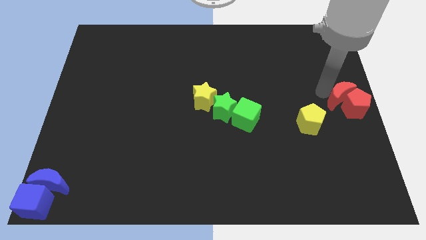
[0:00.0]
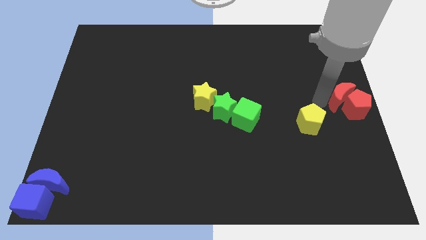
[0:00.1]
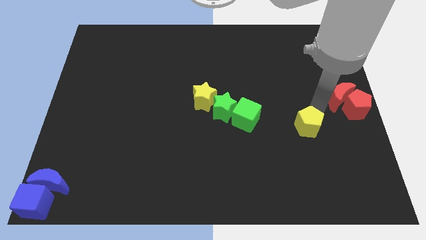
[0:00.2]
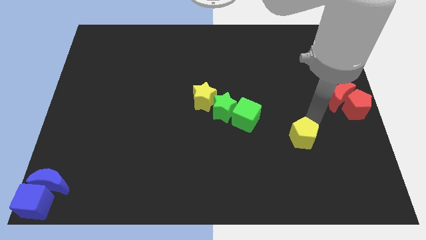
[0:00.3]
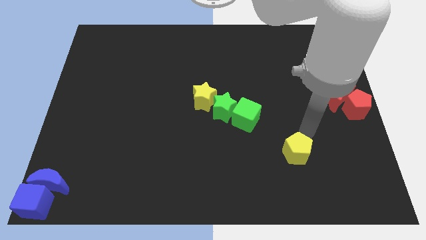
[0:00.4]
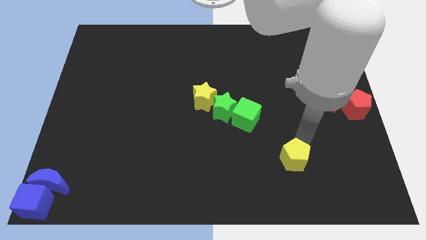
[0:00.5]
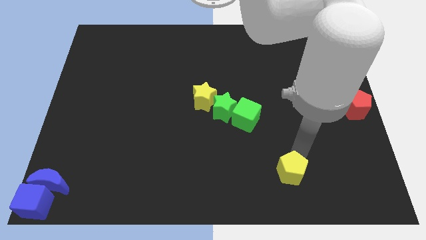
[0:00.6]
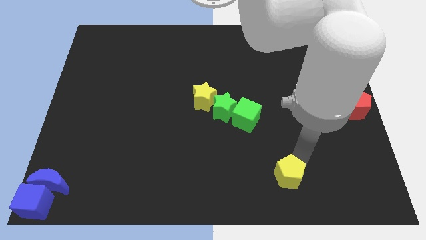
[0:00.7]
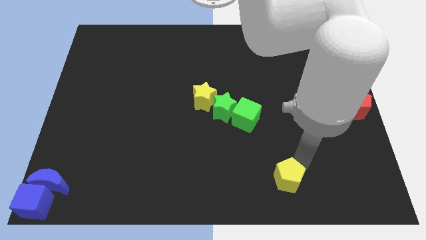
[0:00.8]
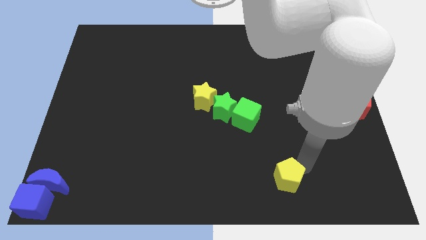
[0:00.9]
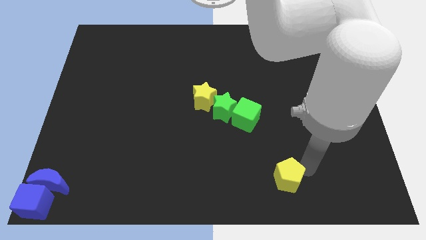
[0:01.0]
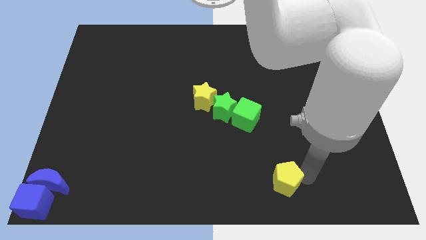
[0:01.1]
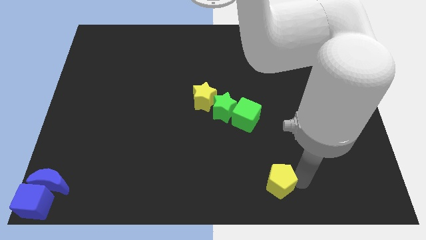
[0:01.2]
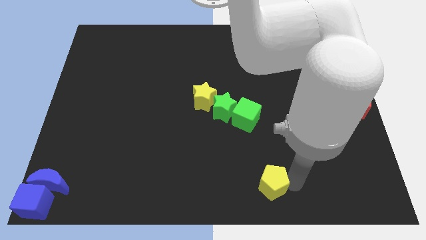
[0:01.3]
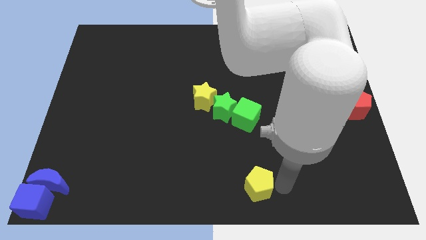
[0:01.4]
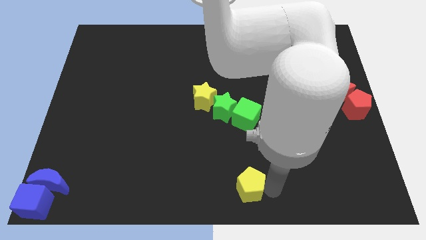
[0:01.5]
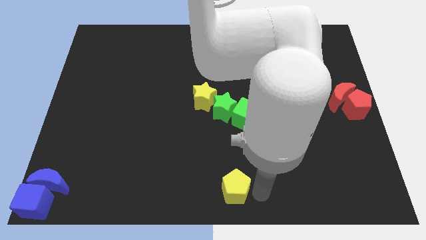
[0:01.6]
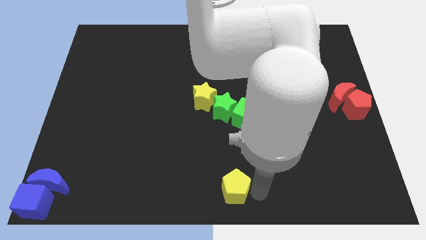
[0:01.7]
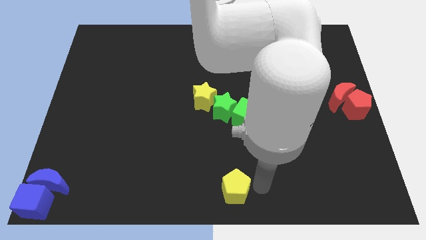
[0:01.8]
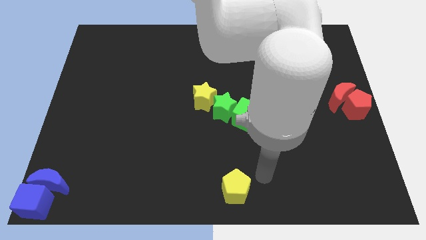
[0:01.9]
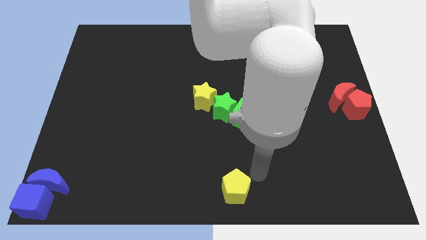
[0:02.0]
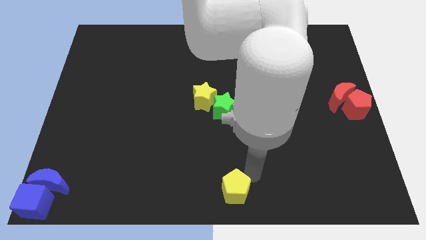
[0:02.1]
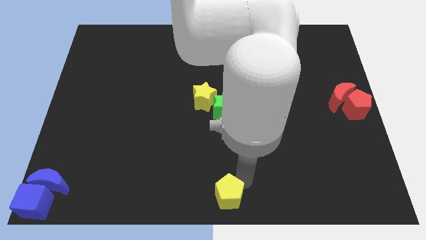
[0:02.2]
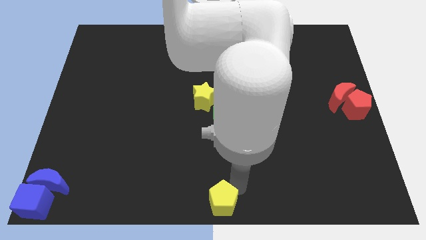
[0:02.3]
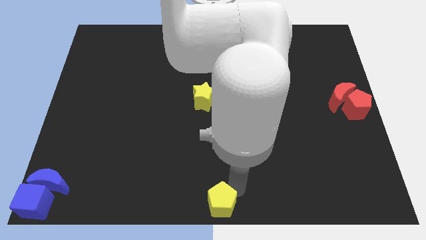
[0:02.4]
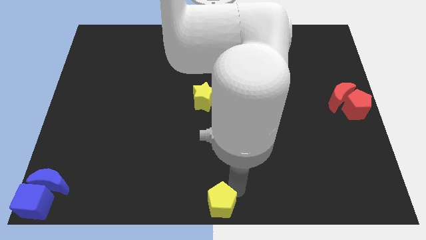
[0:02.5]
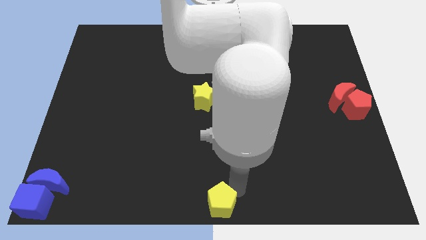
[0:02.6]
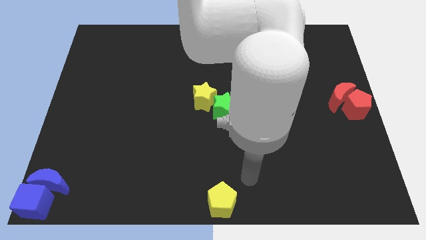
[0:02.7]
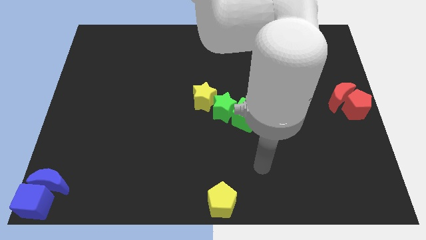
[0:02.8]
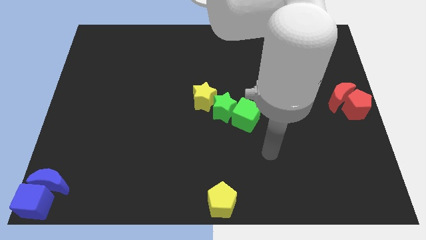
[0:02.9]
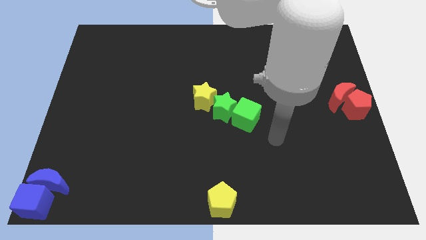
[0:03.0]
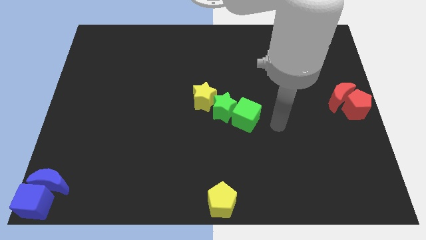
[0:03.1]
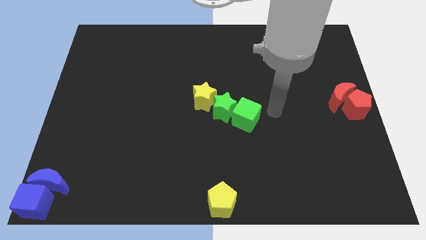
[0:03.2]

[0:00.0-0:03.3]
move the yellow pentagon to the bottom center of the board

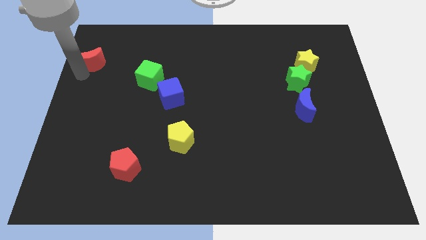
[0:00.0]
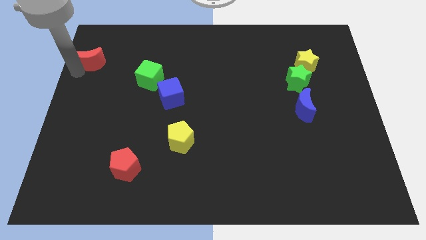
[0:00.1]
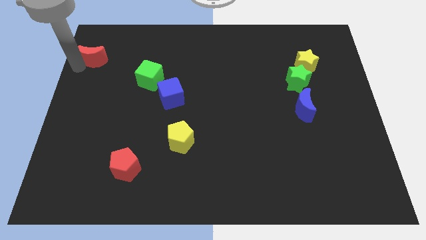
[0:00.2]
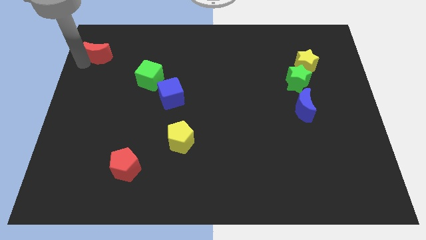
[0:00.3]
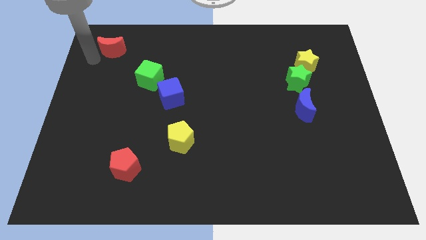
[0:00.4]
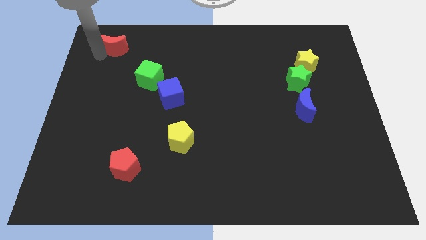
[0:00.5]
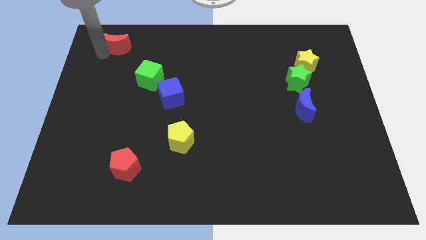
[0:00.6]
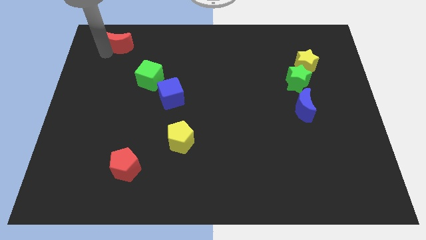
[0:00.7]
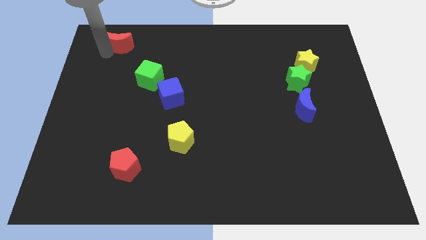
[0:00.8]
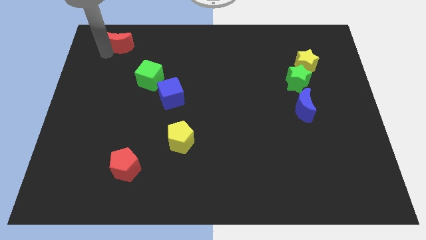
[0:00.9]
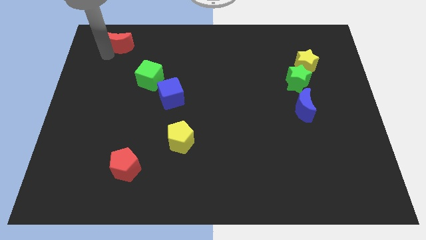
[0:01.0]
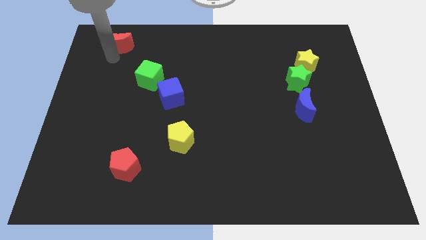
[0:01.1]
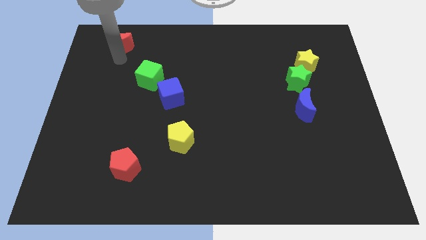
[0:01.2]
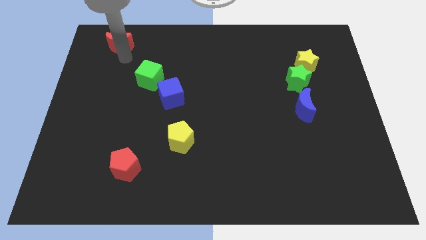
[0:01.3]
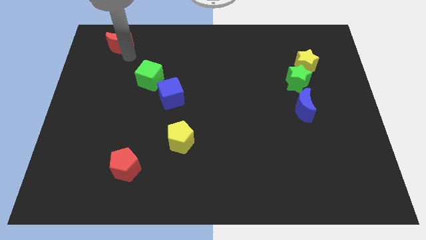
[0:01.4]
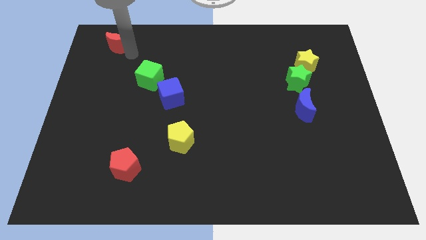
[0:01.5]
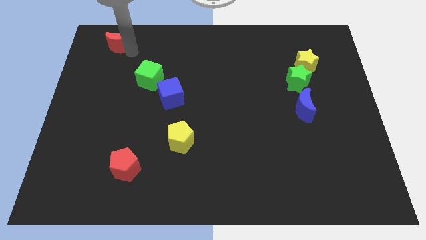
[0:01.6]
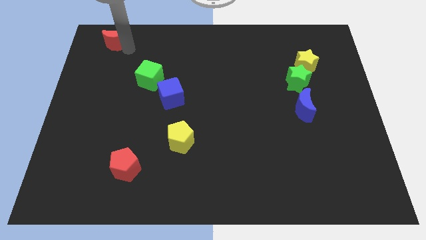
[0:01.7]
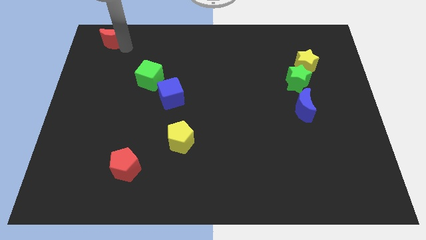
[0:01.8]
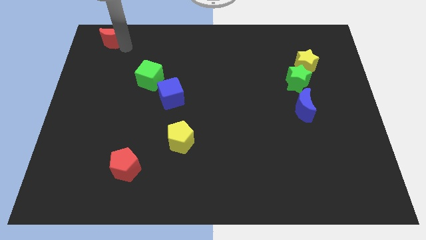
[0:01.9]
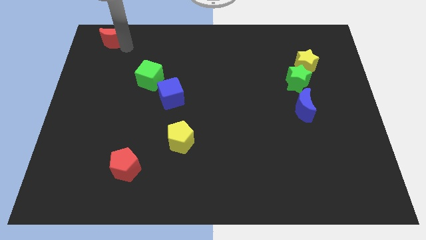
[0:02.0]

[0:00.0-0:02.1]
place the red crescent diagonal to the green cube

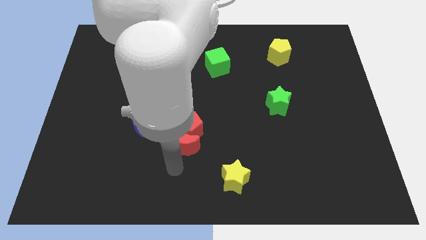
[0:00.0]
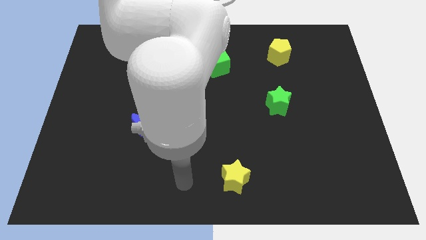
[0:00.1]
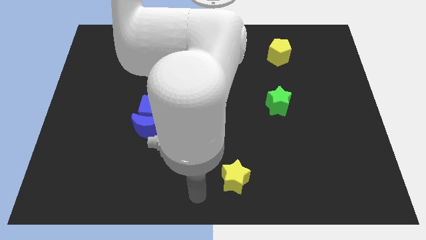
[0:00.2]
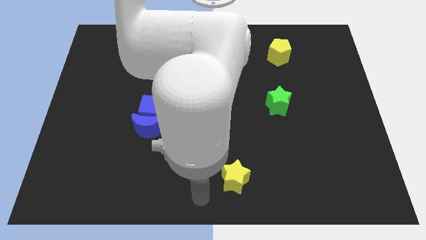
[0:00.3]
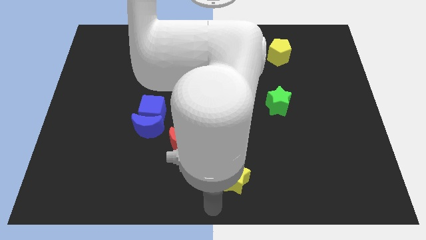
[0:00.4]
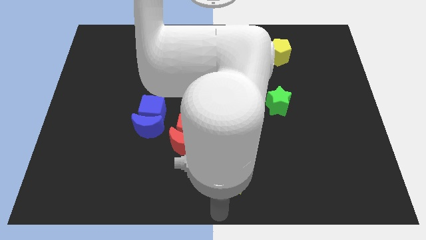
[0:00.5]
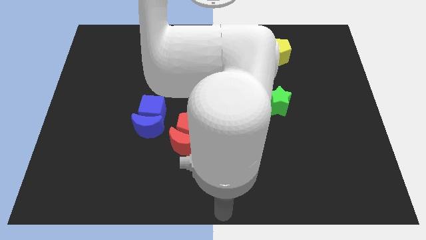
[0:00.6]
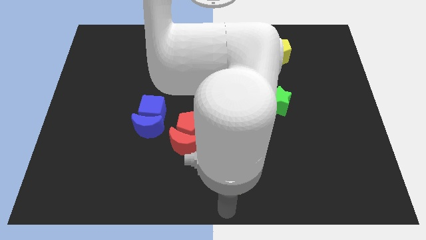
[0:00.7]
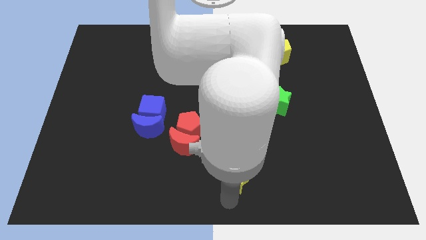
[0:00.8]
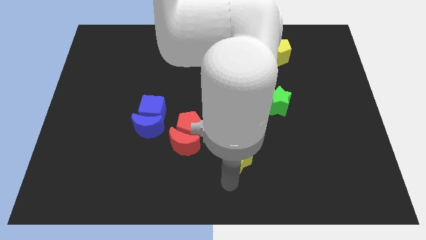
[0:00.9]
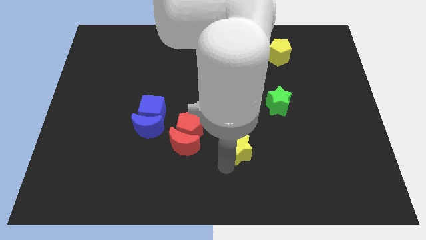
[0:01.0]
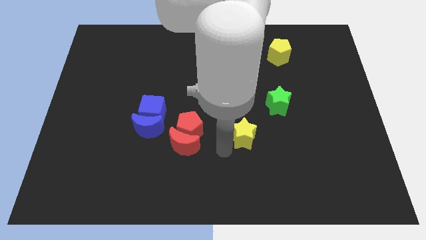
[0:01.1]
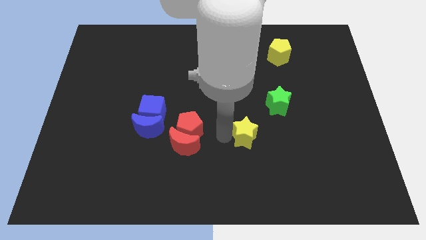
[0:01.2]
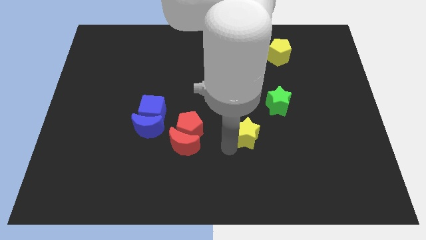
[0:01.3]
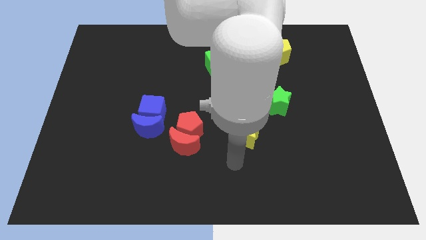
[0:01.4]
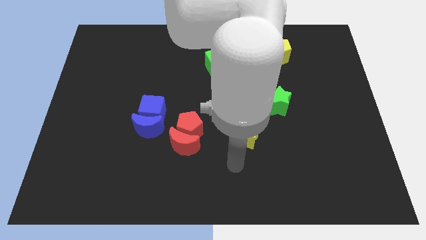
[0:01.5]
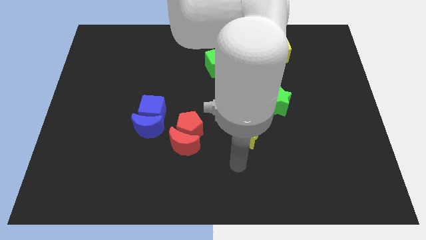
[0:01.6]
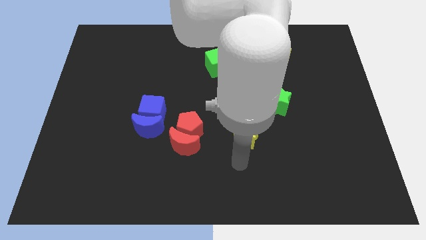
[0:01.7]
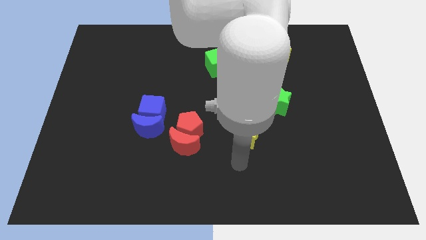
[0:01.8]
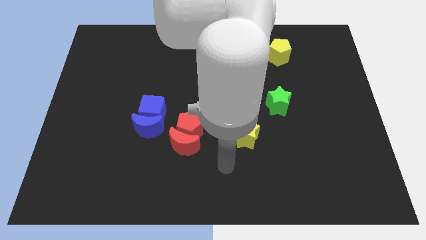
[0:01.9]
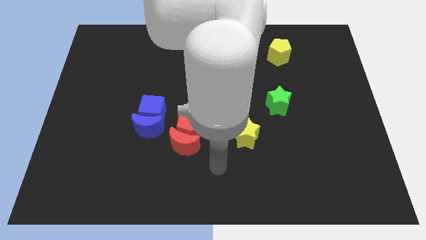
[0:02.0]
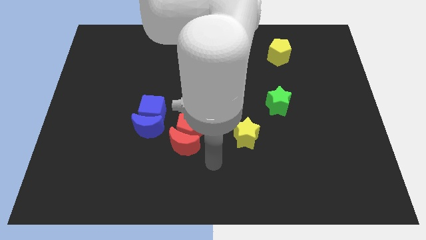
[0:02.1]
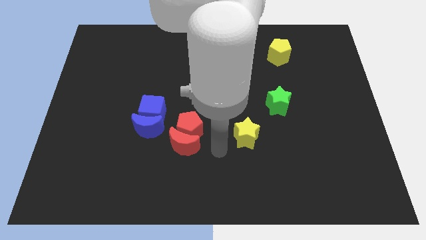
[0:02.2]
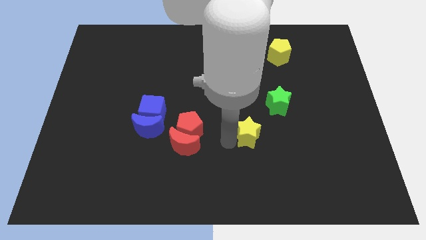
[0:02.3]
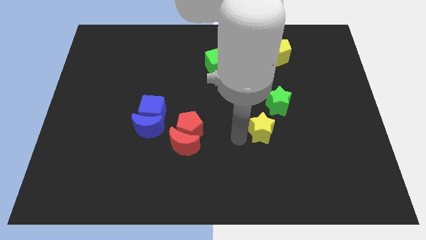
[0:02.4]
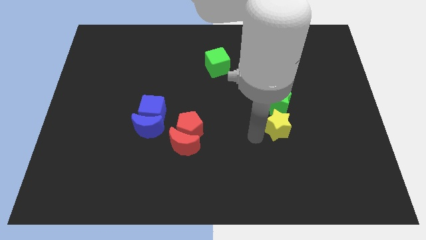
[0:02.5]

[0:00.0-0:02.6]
put the yellow star below the green star

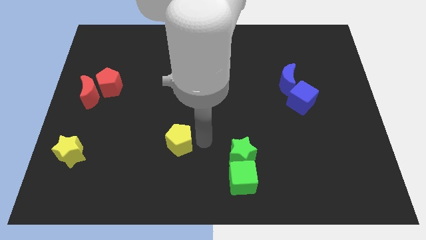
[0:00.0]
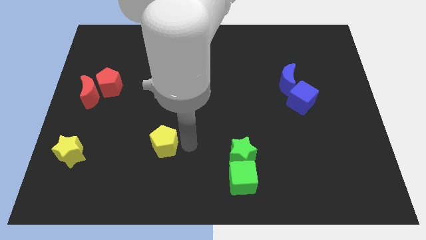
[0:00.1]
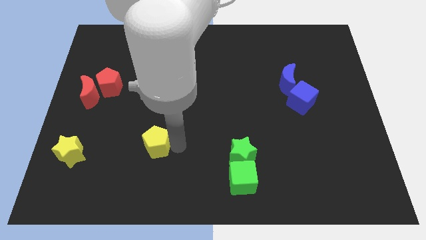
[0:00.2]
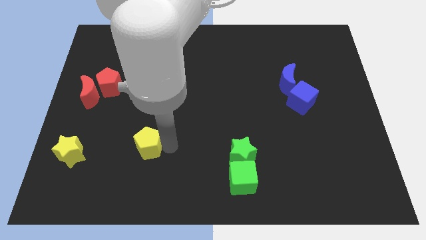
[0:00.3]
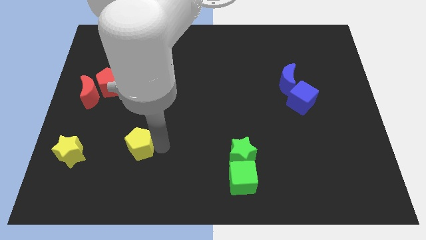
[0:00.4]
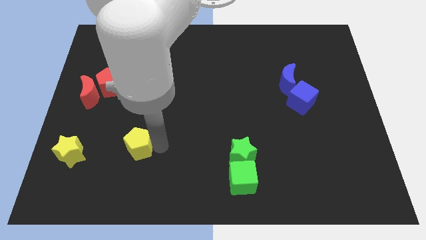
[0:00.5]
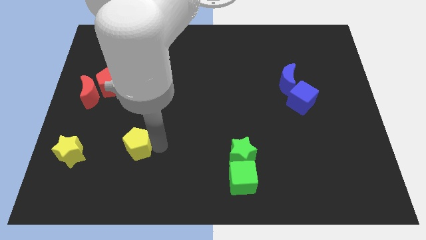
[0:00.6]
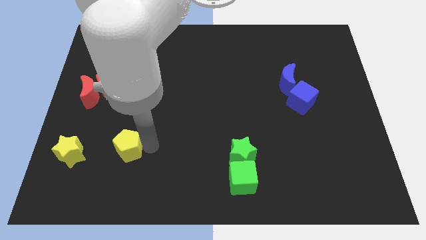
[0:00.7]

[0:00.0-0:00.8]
move the yellow pentagon towards the yellow star

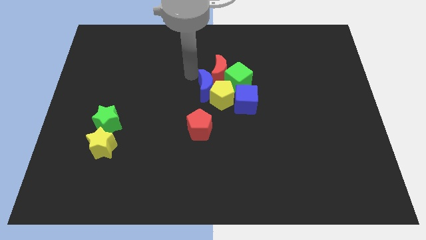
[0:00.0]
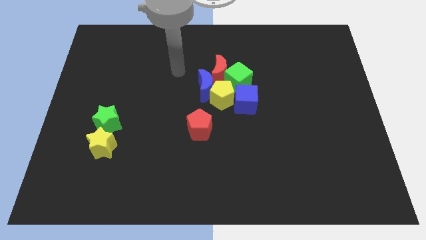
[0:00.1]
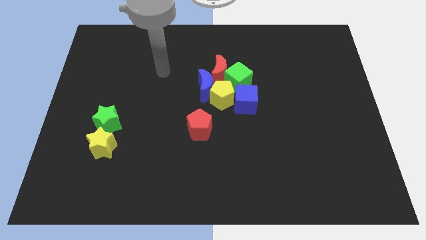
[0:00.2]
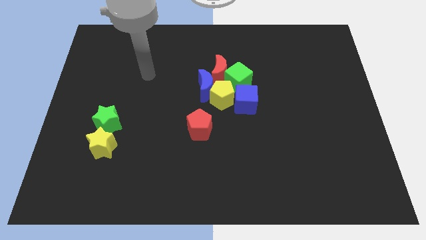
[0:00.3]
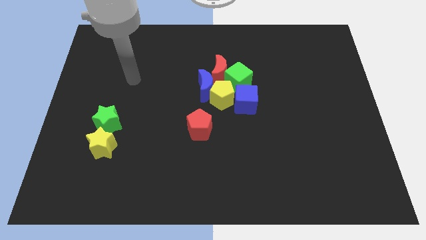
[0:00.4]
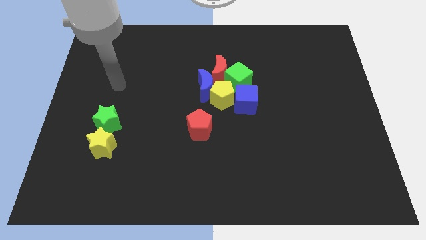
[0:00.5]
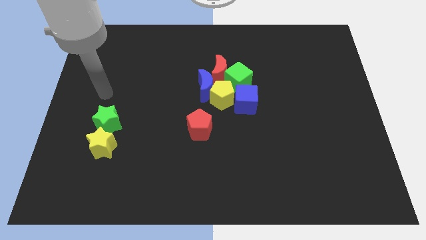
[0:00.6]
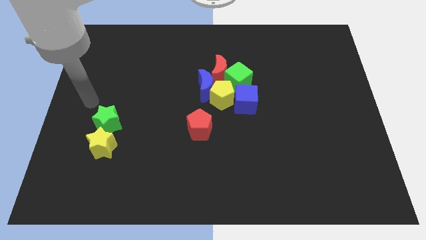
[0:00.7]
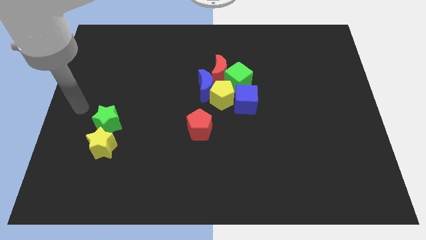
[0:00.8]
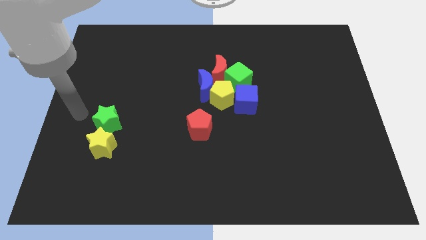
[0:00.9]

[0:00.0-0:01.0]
move your arm away from the blue moon
